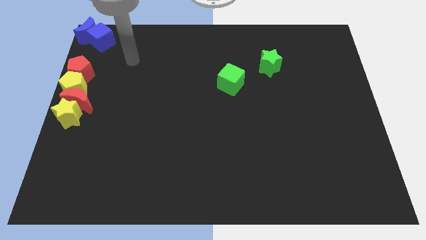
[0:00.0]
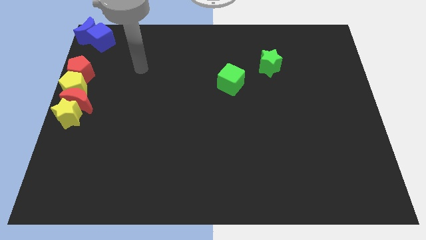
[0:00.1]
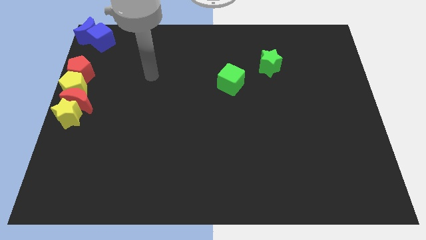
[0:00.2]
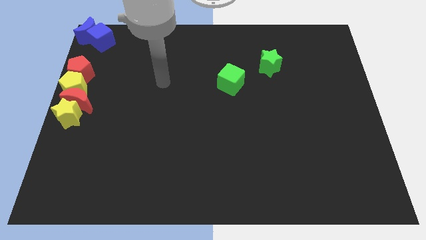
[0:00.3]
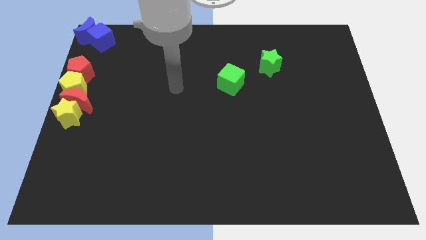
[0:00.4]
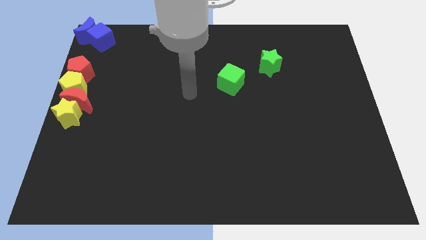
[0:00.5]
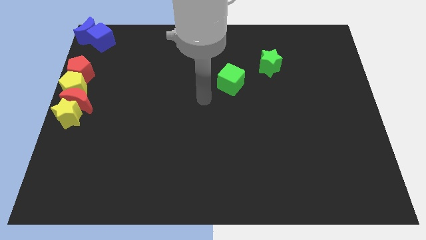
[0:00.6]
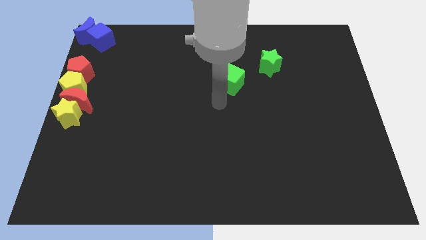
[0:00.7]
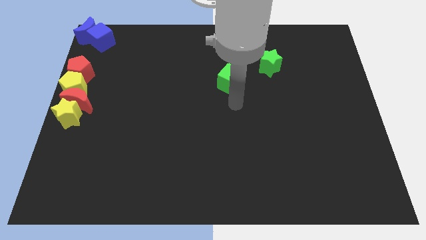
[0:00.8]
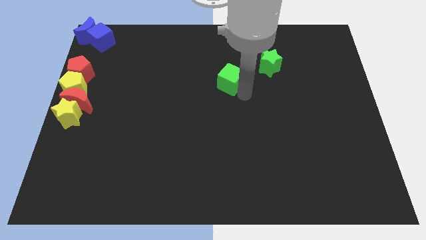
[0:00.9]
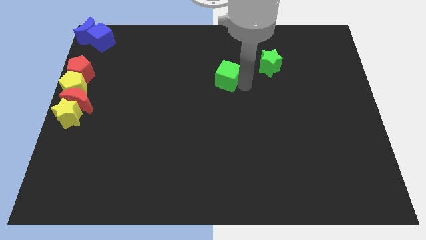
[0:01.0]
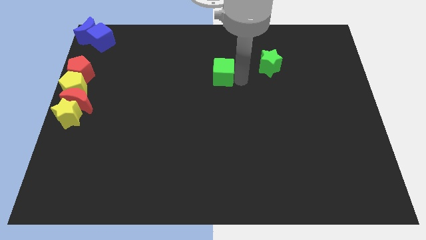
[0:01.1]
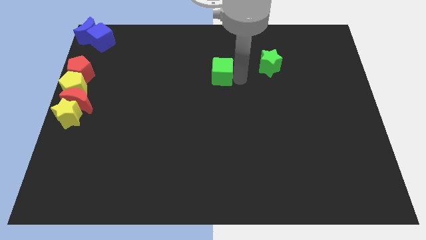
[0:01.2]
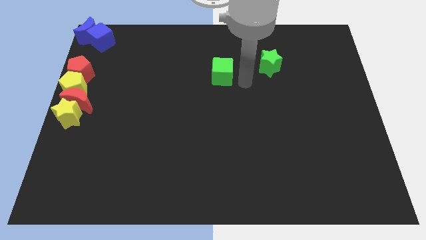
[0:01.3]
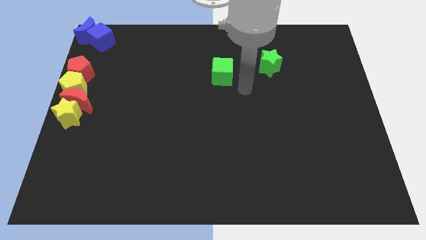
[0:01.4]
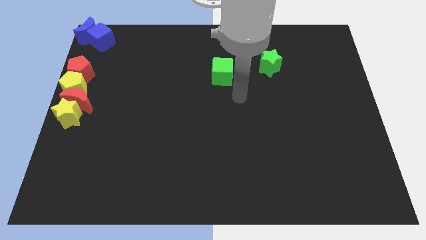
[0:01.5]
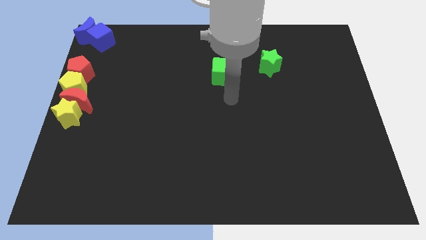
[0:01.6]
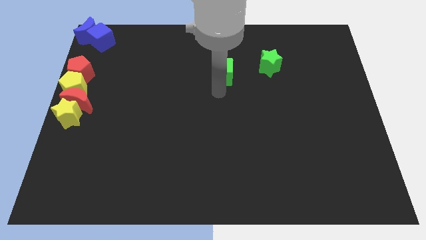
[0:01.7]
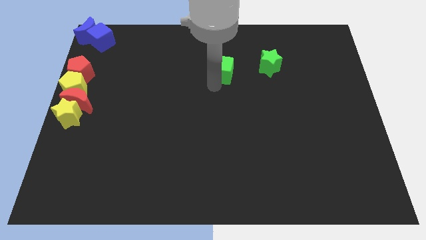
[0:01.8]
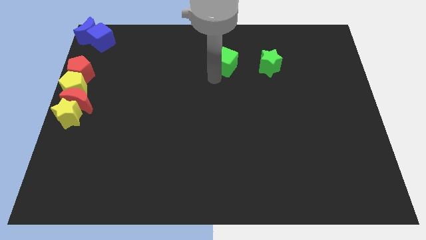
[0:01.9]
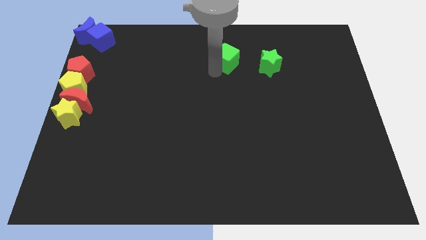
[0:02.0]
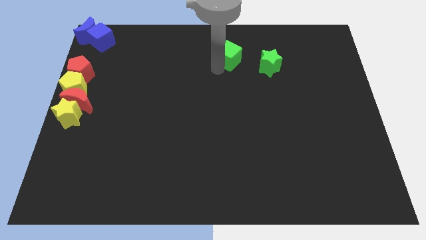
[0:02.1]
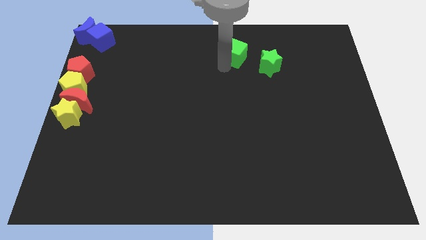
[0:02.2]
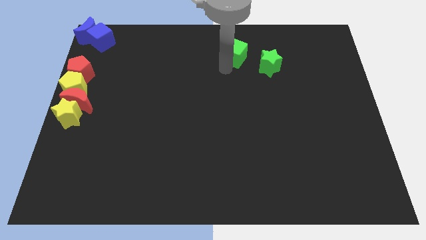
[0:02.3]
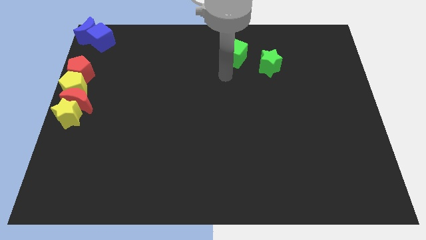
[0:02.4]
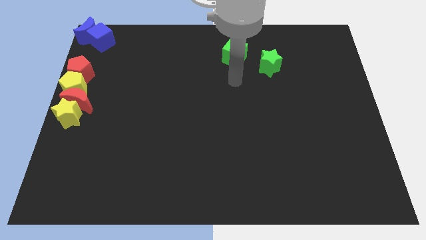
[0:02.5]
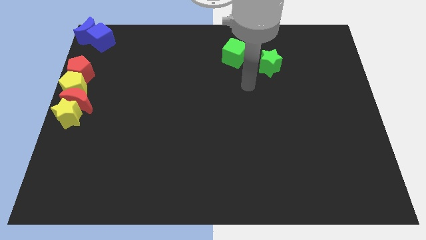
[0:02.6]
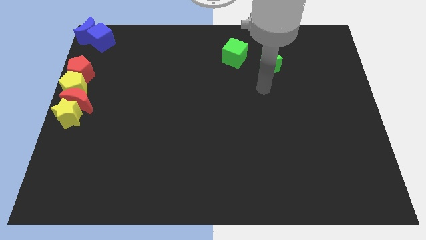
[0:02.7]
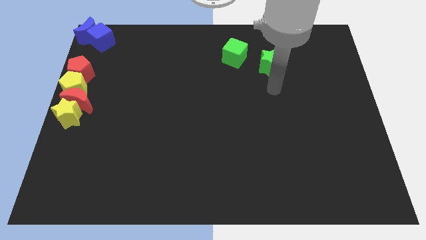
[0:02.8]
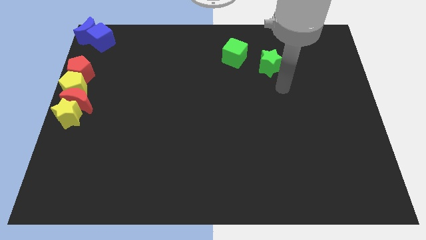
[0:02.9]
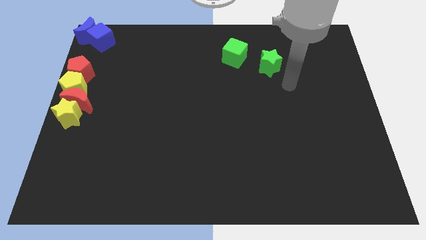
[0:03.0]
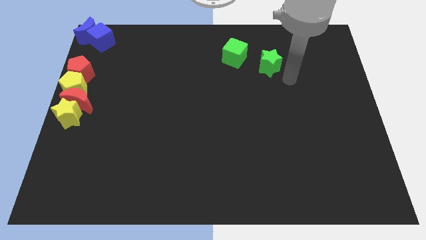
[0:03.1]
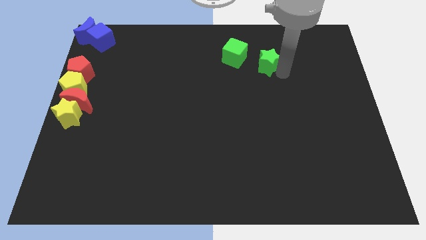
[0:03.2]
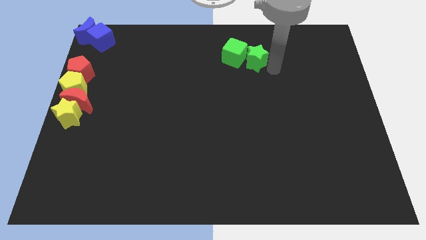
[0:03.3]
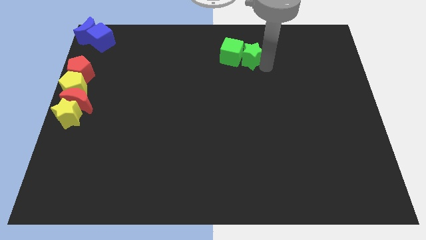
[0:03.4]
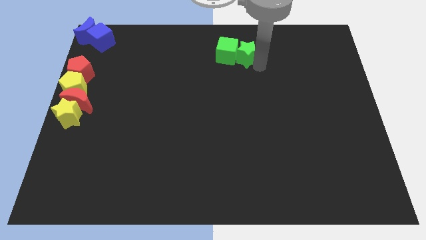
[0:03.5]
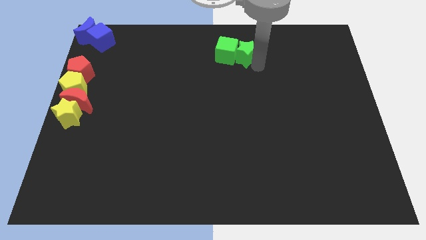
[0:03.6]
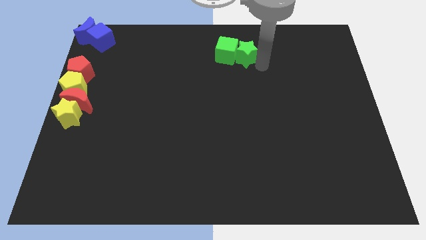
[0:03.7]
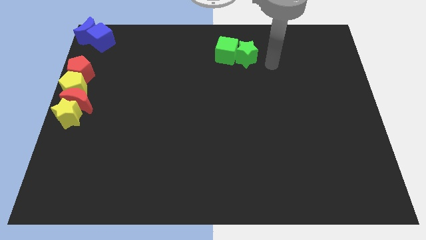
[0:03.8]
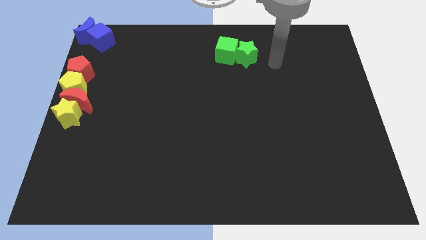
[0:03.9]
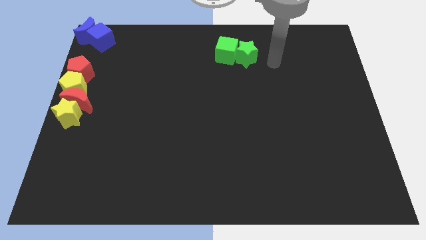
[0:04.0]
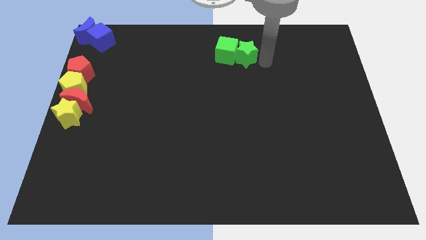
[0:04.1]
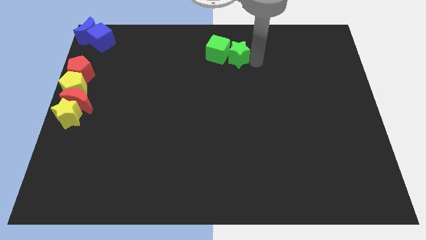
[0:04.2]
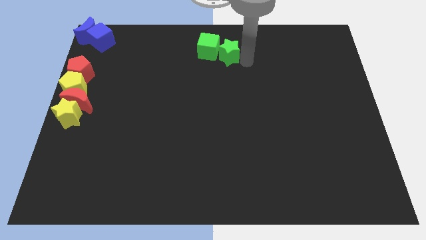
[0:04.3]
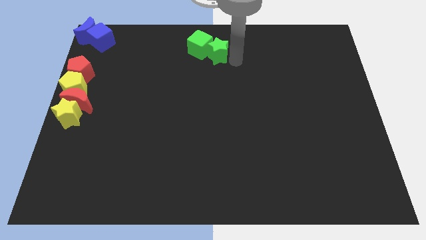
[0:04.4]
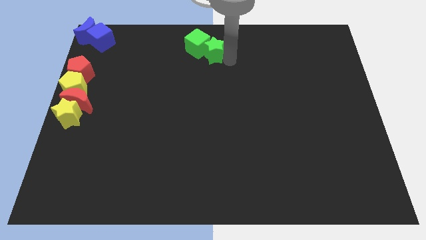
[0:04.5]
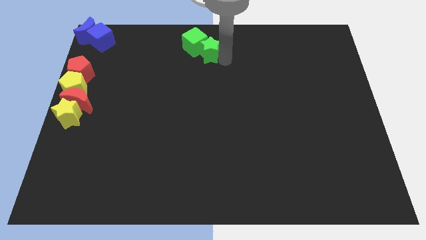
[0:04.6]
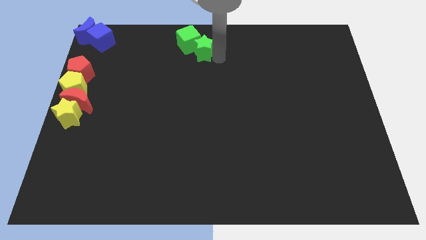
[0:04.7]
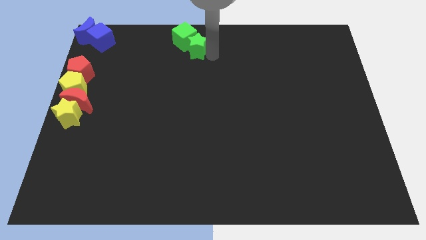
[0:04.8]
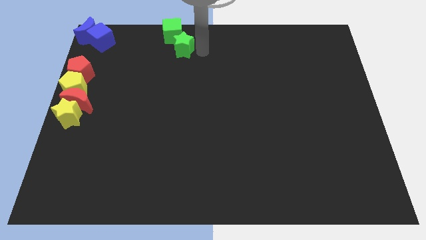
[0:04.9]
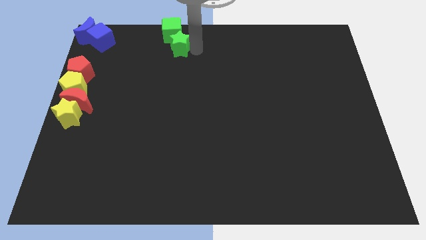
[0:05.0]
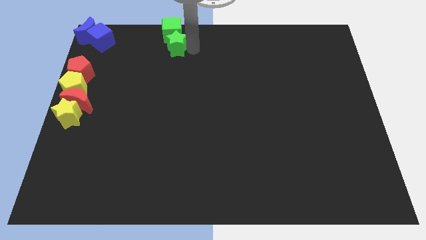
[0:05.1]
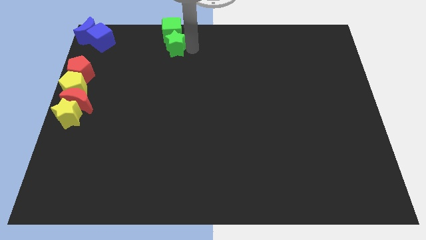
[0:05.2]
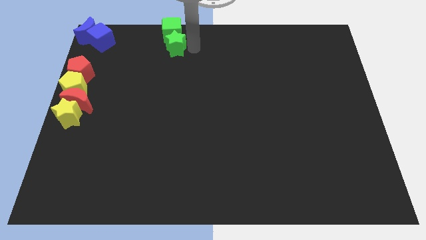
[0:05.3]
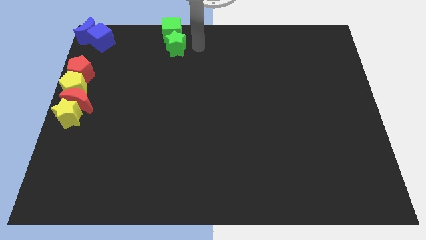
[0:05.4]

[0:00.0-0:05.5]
push the green blocks towards the top left side of the board

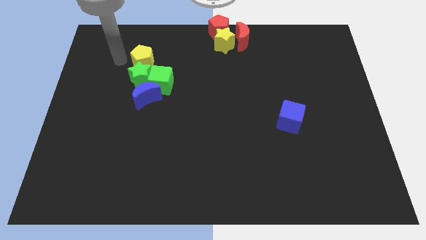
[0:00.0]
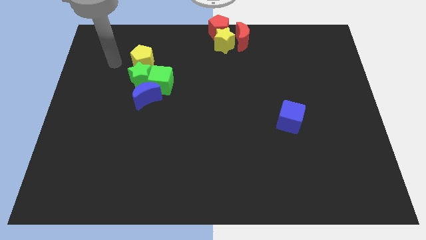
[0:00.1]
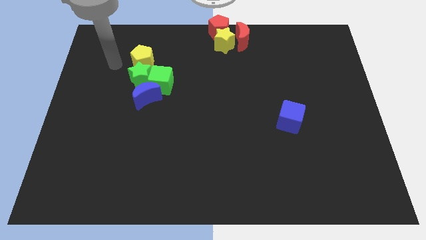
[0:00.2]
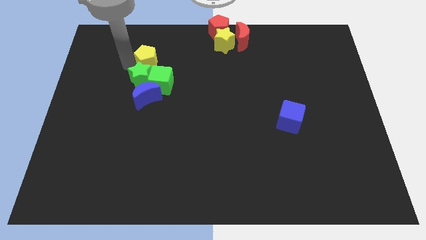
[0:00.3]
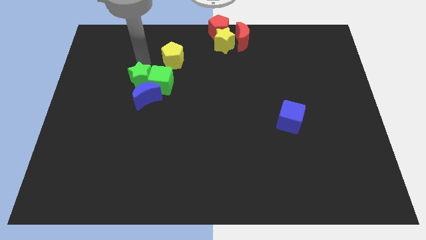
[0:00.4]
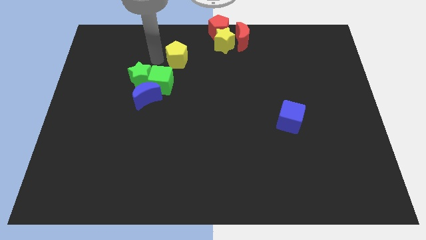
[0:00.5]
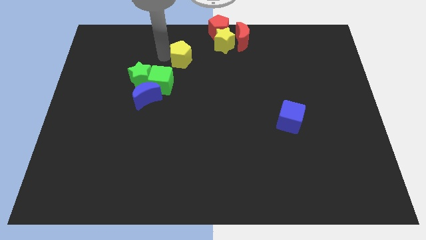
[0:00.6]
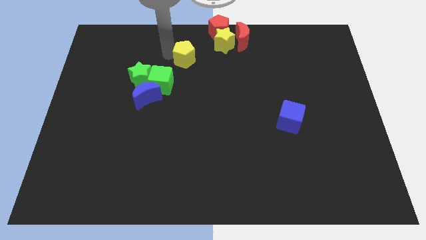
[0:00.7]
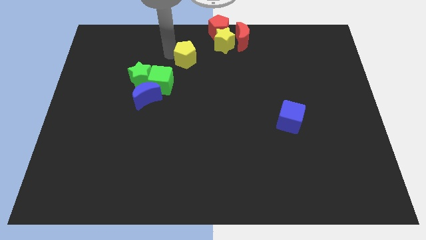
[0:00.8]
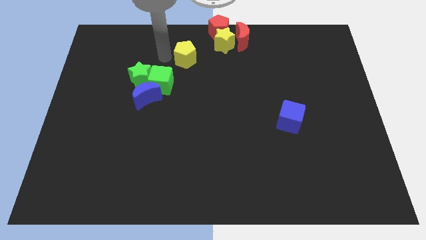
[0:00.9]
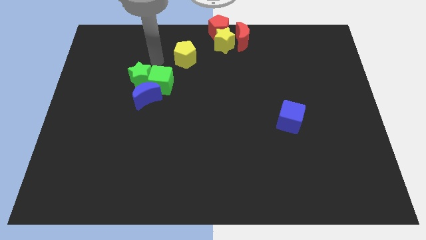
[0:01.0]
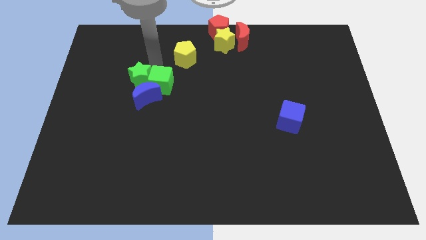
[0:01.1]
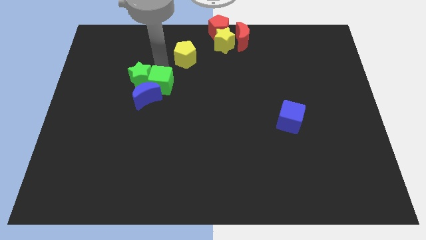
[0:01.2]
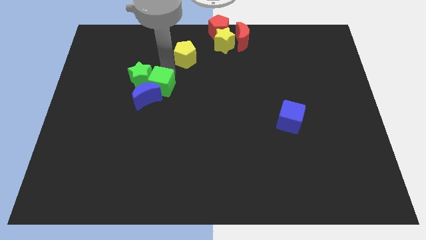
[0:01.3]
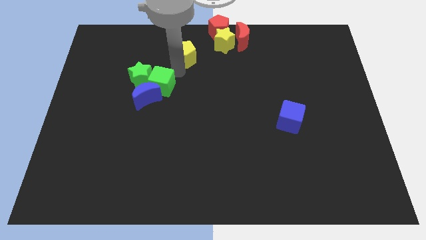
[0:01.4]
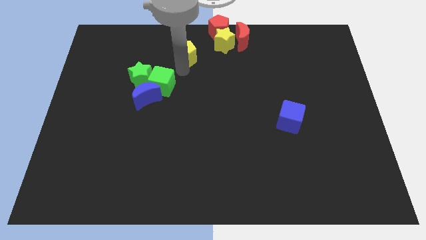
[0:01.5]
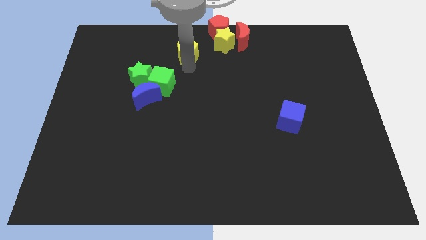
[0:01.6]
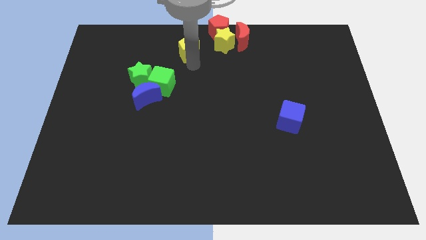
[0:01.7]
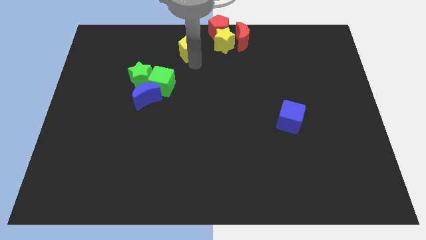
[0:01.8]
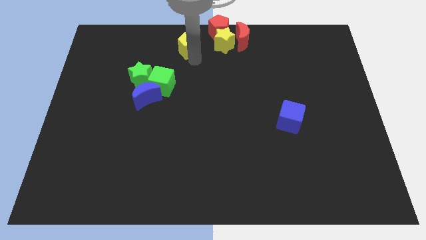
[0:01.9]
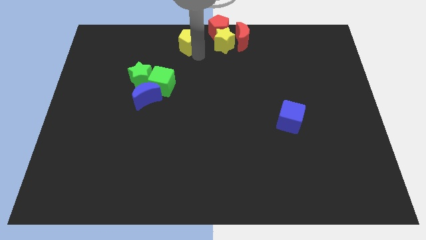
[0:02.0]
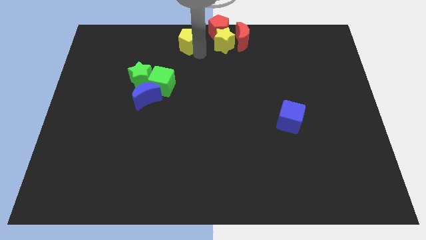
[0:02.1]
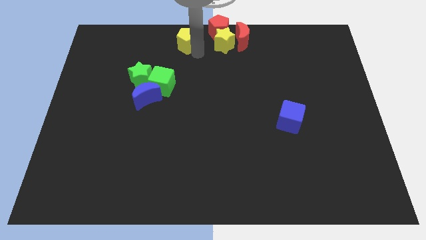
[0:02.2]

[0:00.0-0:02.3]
place the yellow pentagon left to the yellow star

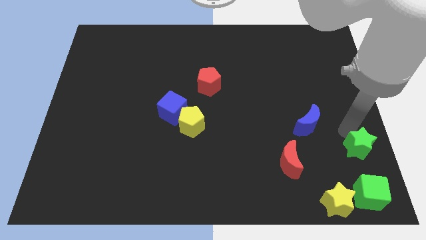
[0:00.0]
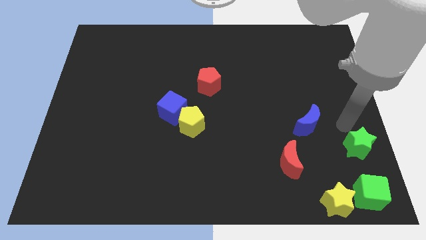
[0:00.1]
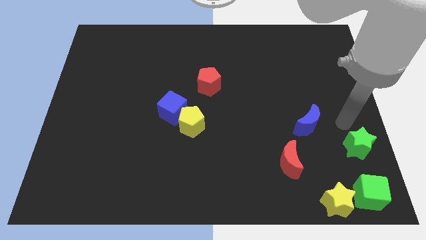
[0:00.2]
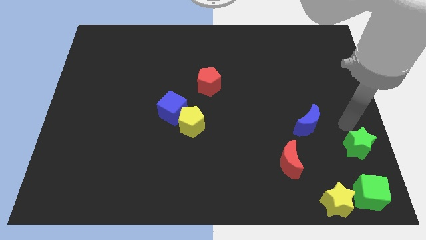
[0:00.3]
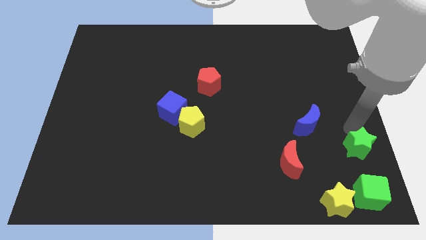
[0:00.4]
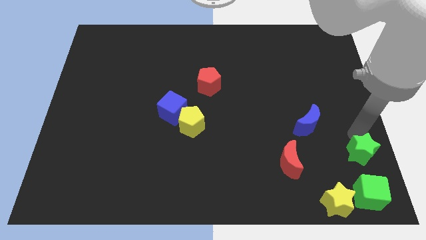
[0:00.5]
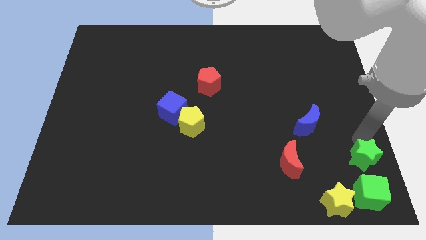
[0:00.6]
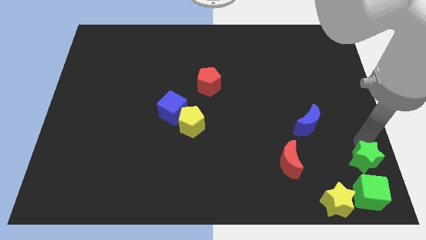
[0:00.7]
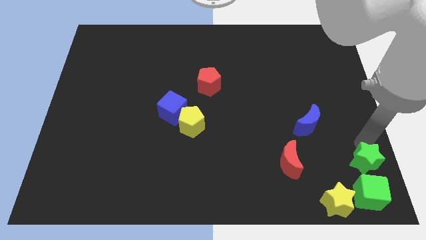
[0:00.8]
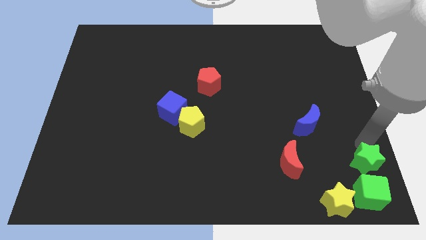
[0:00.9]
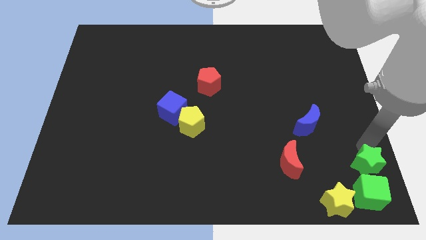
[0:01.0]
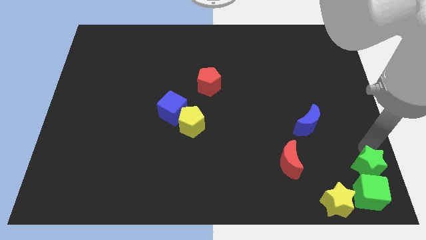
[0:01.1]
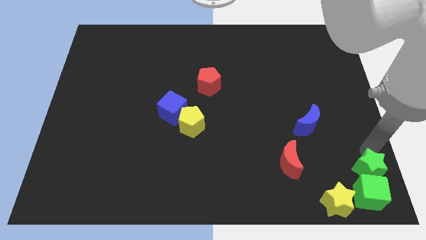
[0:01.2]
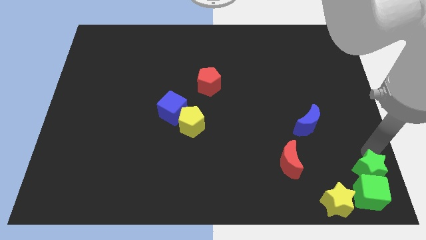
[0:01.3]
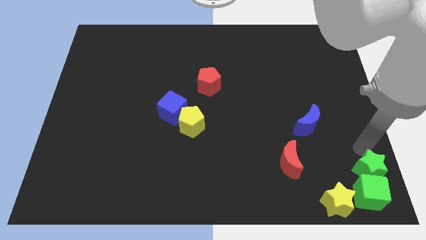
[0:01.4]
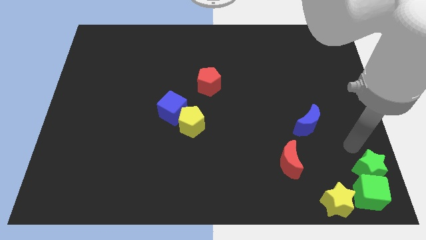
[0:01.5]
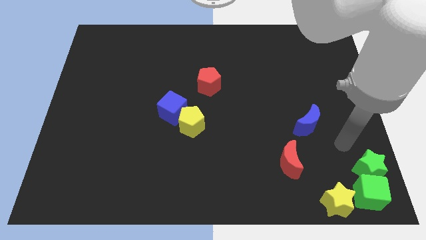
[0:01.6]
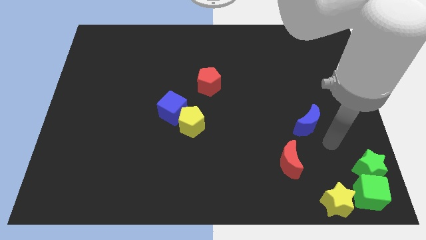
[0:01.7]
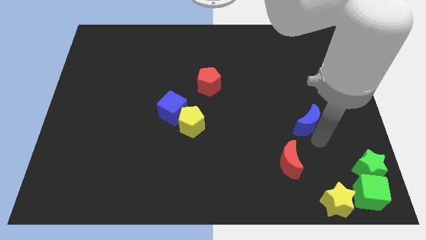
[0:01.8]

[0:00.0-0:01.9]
place the green star above the green cube
